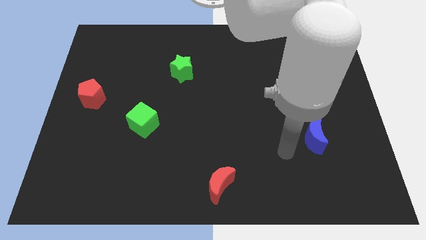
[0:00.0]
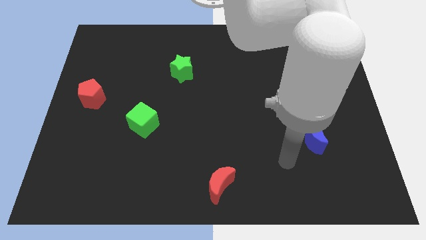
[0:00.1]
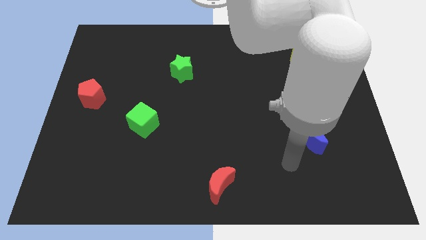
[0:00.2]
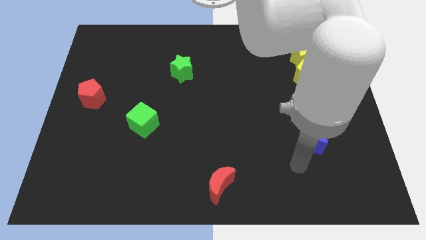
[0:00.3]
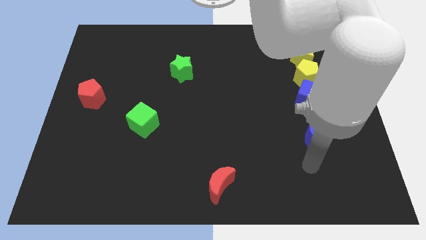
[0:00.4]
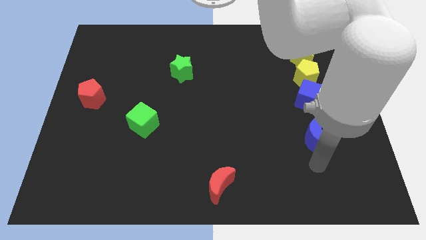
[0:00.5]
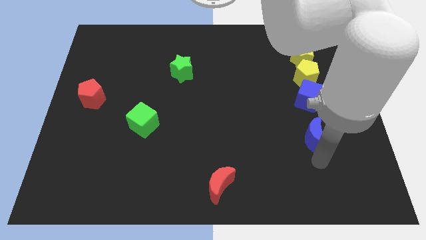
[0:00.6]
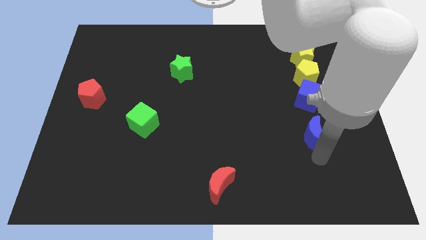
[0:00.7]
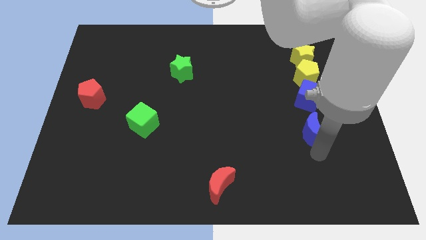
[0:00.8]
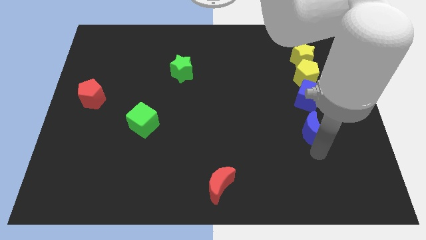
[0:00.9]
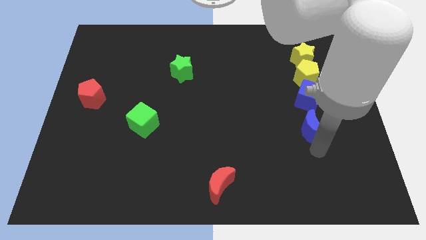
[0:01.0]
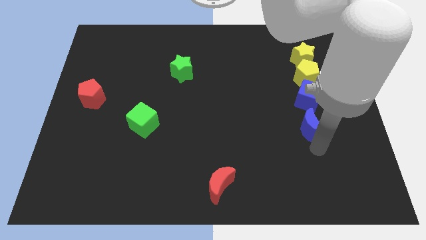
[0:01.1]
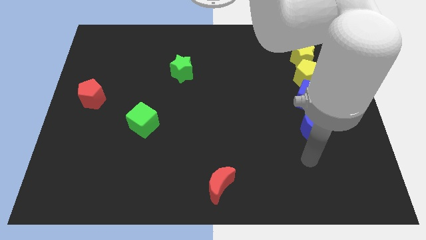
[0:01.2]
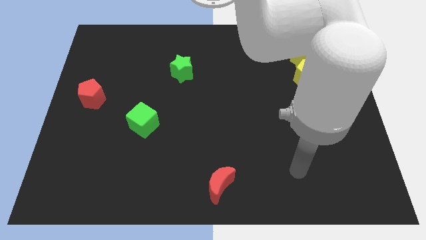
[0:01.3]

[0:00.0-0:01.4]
place blue moon below the blue cube

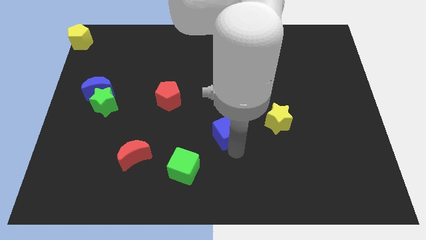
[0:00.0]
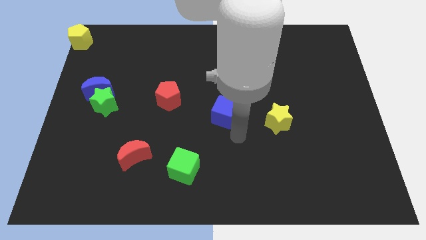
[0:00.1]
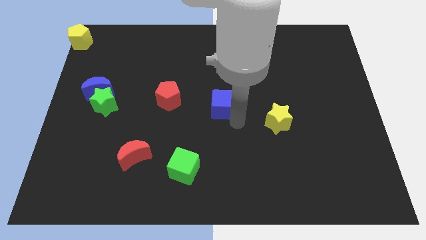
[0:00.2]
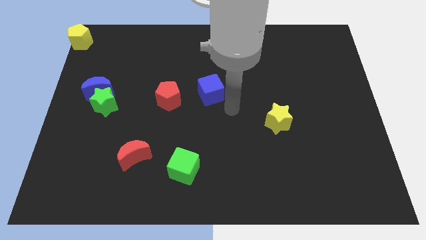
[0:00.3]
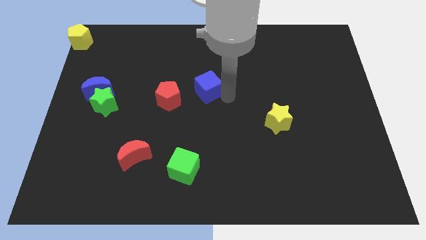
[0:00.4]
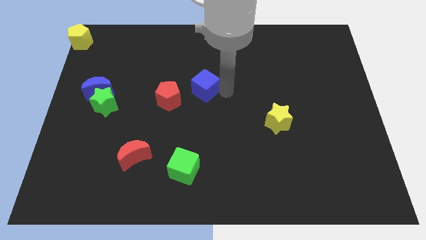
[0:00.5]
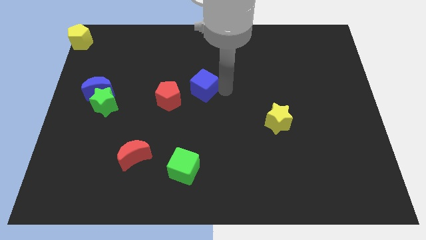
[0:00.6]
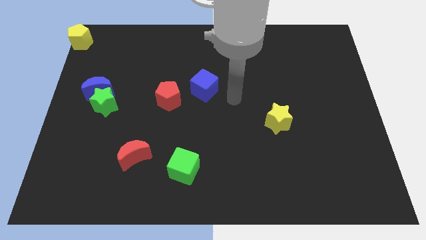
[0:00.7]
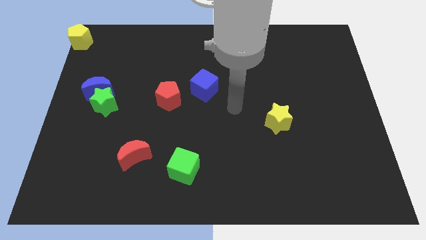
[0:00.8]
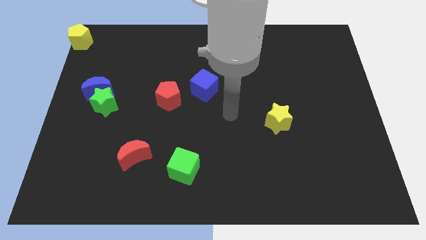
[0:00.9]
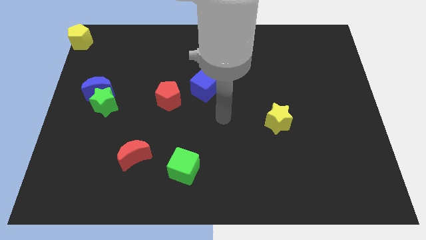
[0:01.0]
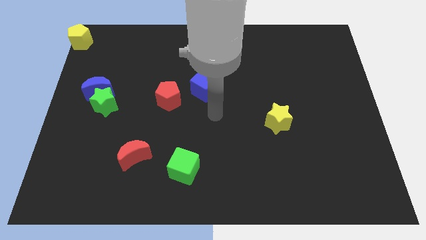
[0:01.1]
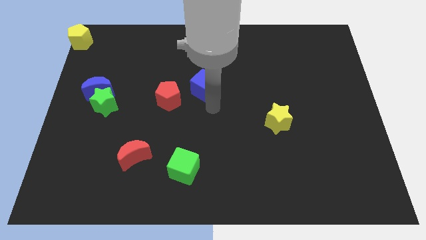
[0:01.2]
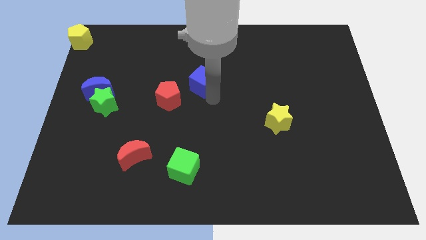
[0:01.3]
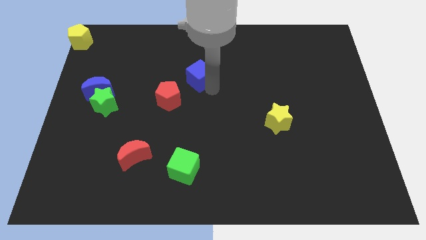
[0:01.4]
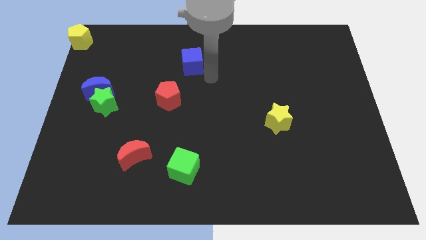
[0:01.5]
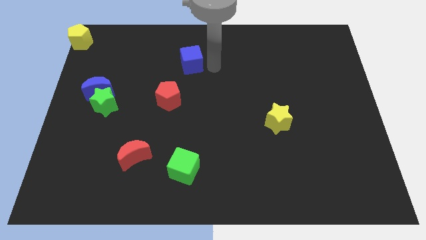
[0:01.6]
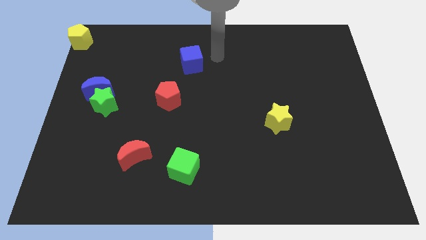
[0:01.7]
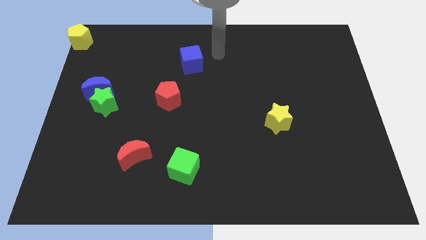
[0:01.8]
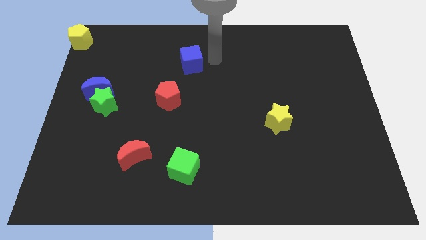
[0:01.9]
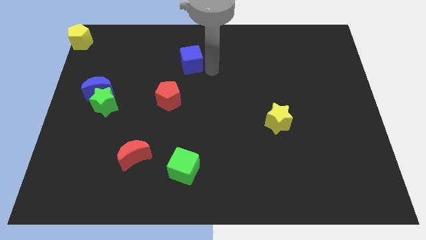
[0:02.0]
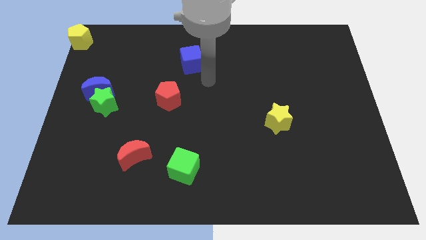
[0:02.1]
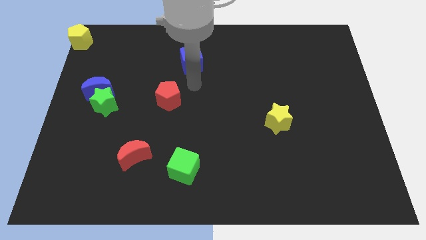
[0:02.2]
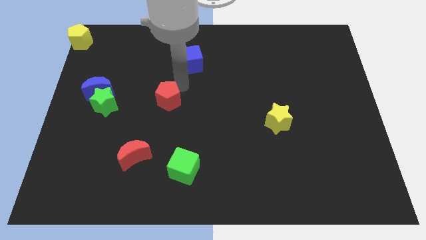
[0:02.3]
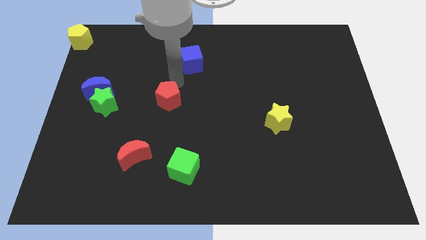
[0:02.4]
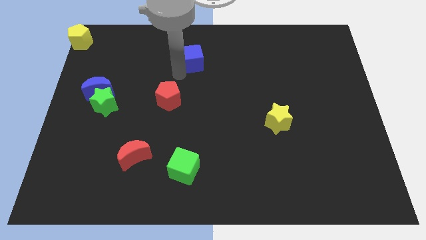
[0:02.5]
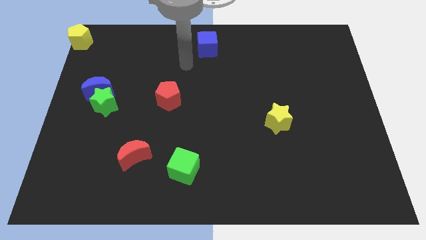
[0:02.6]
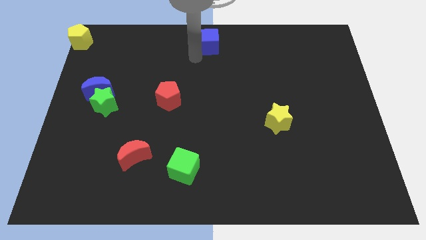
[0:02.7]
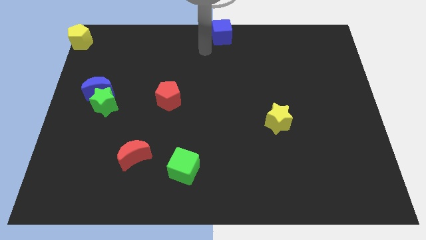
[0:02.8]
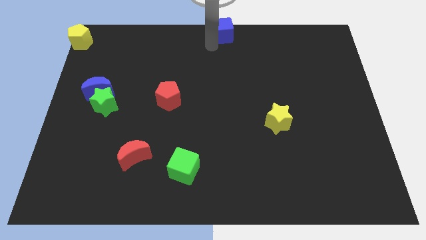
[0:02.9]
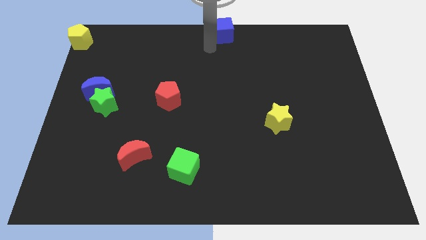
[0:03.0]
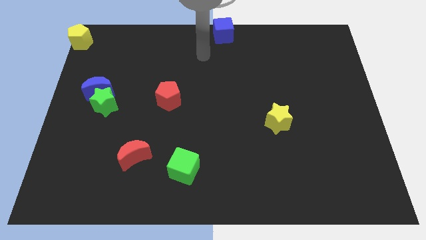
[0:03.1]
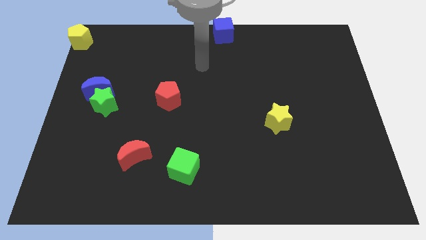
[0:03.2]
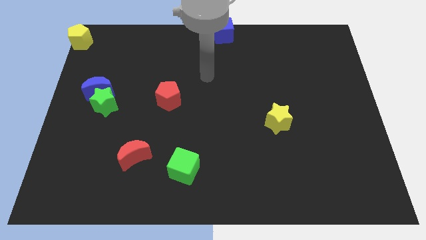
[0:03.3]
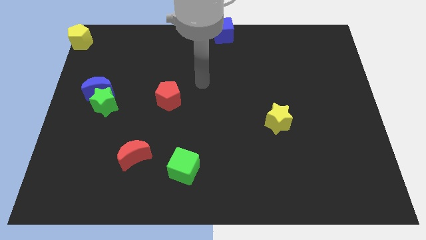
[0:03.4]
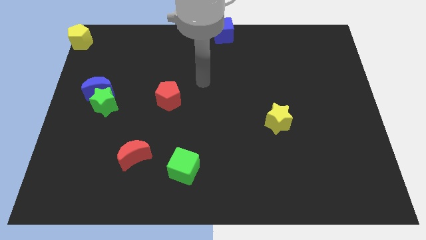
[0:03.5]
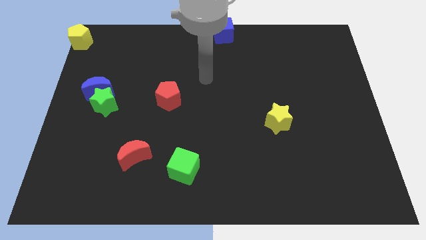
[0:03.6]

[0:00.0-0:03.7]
slide the blue cube to the top center of the board

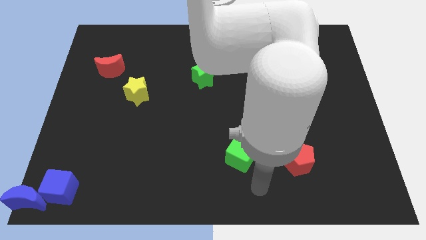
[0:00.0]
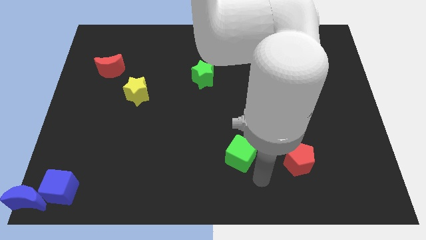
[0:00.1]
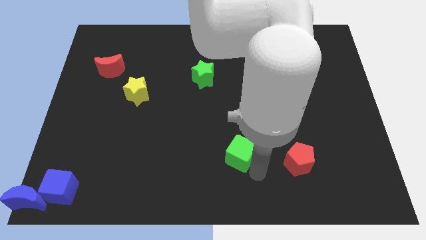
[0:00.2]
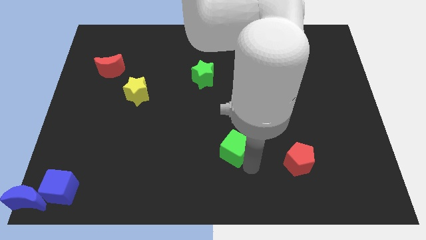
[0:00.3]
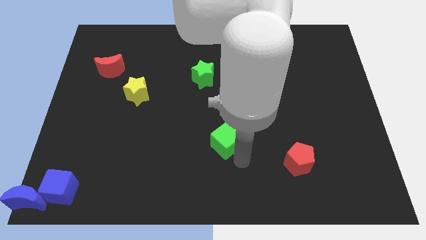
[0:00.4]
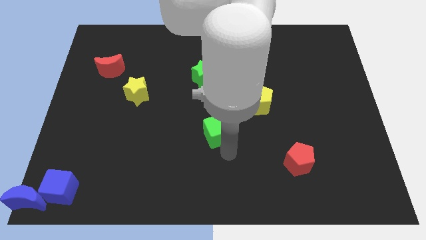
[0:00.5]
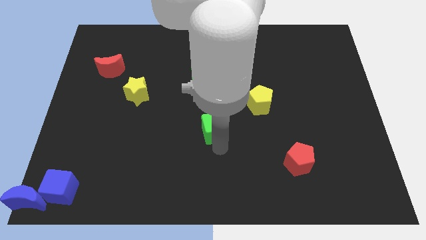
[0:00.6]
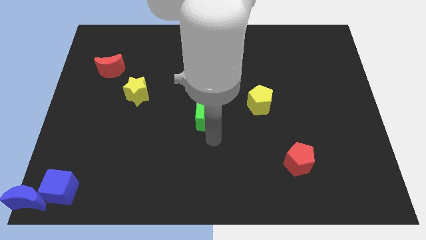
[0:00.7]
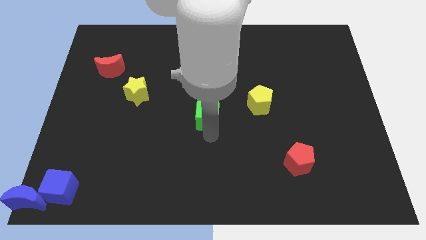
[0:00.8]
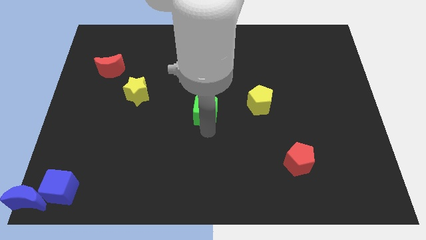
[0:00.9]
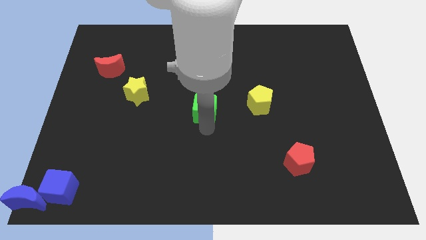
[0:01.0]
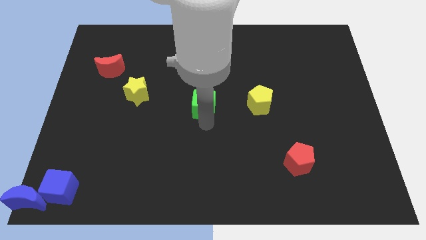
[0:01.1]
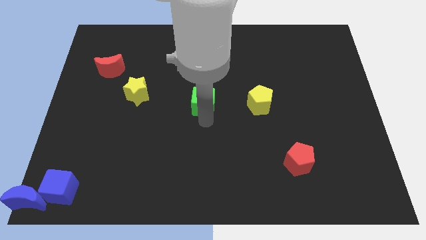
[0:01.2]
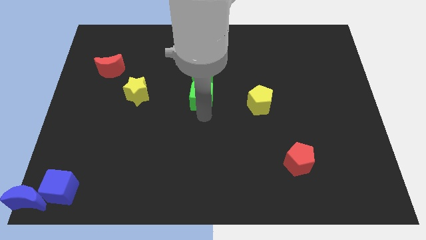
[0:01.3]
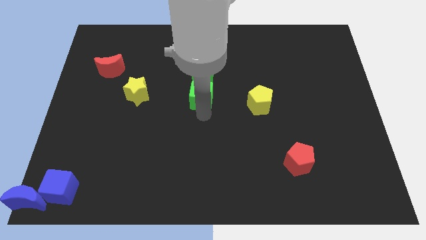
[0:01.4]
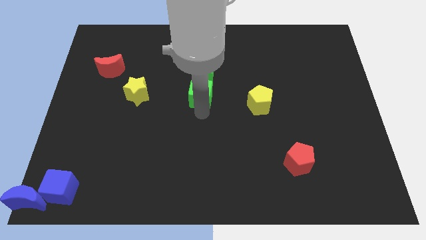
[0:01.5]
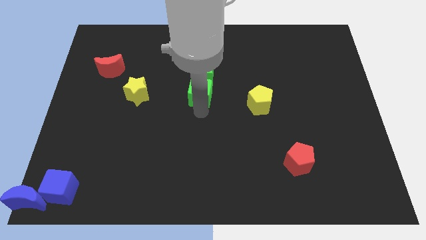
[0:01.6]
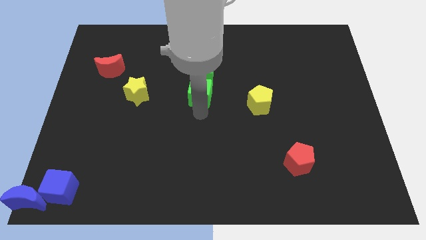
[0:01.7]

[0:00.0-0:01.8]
move the green cube into the bottom side of the green star

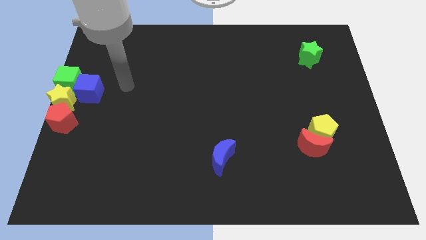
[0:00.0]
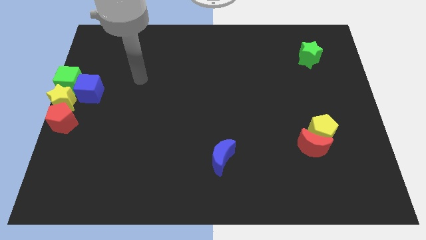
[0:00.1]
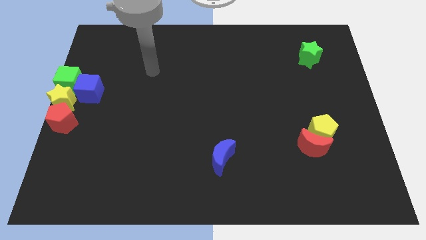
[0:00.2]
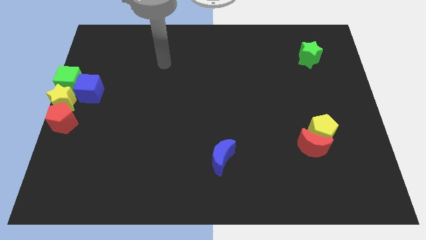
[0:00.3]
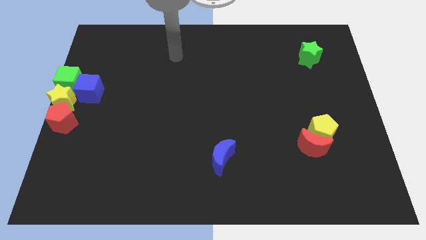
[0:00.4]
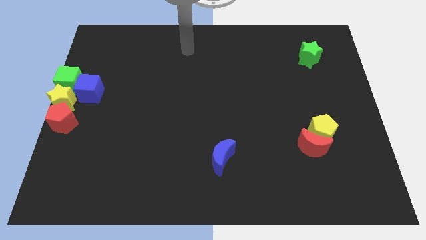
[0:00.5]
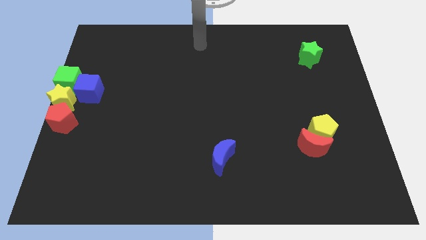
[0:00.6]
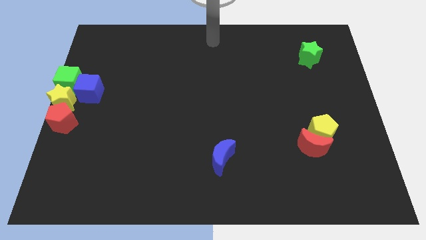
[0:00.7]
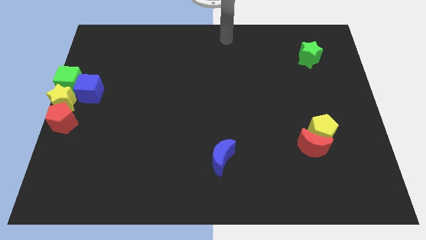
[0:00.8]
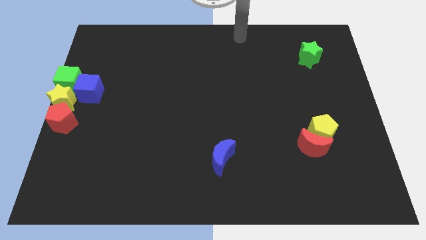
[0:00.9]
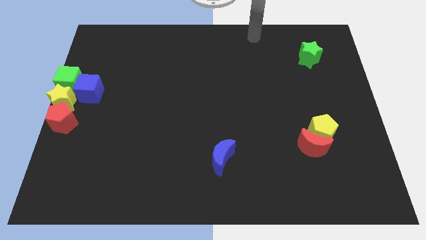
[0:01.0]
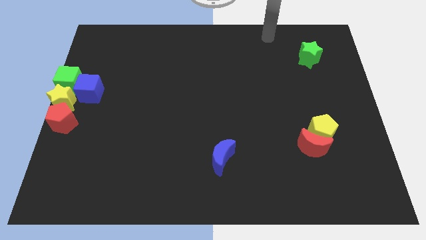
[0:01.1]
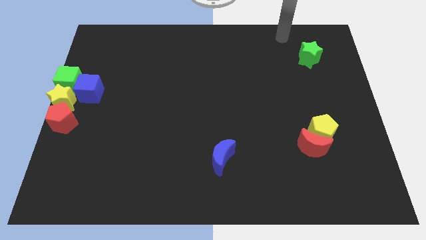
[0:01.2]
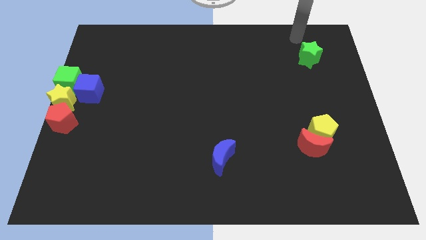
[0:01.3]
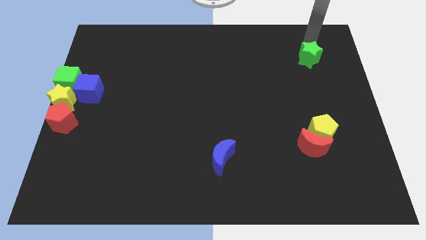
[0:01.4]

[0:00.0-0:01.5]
place your arm at the top of the green star

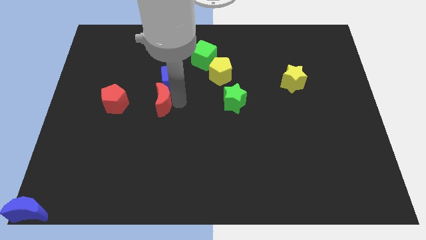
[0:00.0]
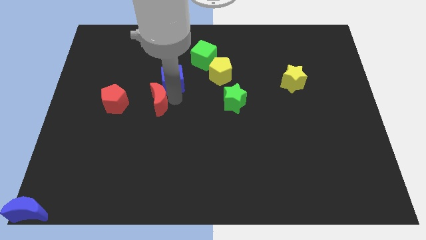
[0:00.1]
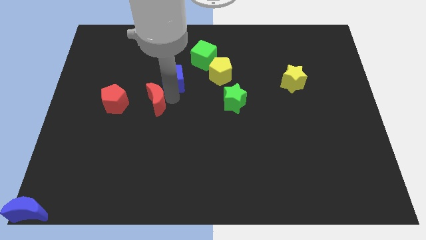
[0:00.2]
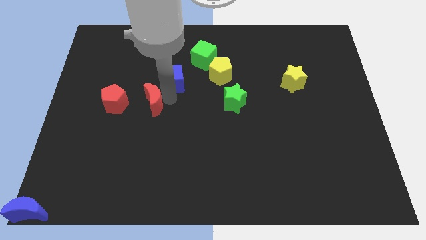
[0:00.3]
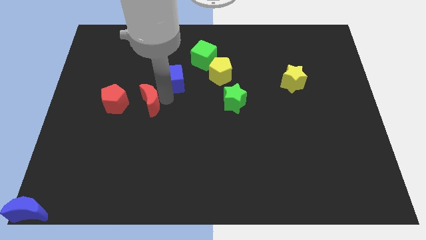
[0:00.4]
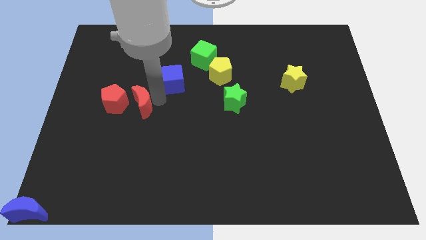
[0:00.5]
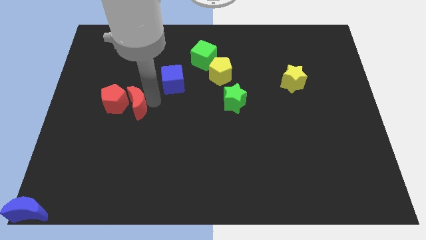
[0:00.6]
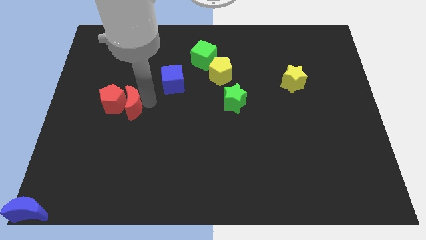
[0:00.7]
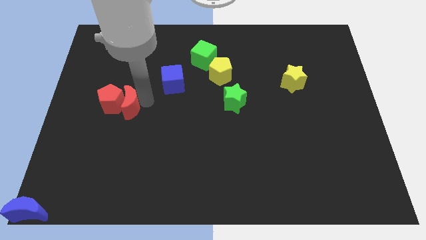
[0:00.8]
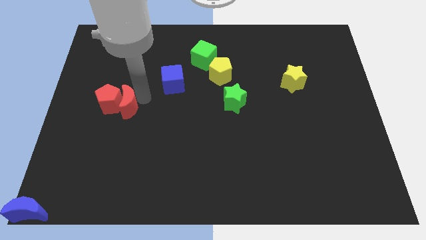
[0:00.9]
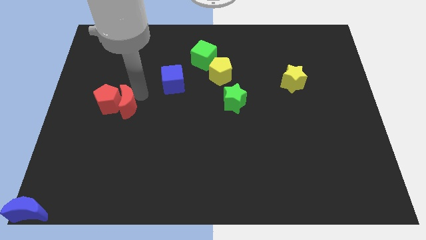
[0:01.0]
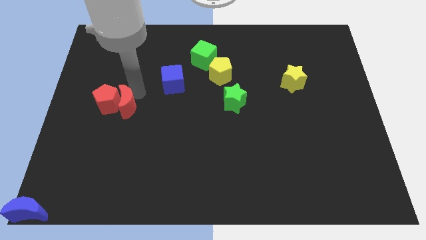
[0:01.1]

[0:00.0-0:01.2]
push the red crescent into the red pentagon
